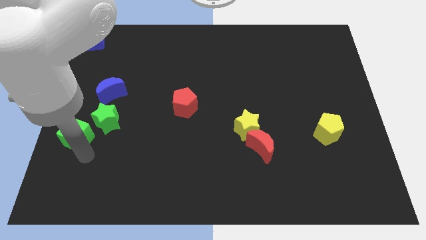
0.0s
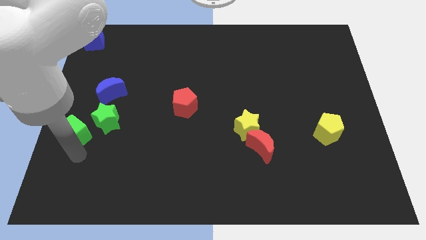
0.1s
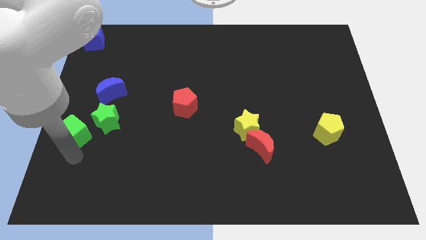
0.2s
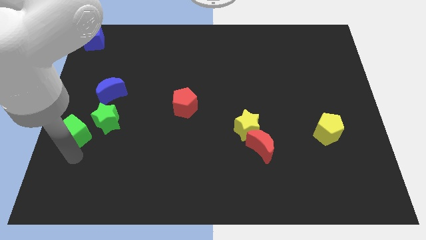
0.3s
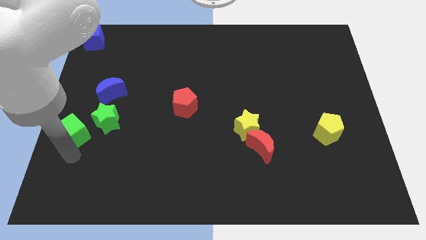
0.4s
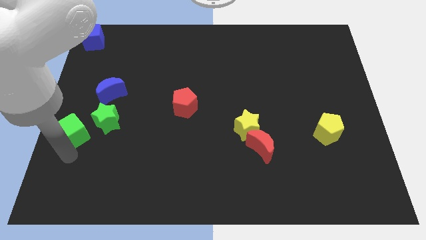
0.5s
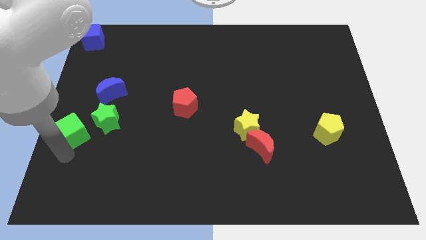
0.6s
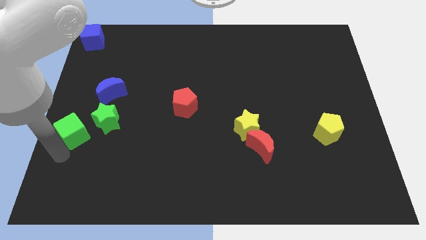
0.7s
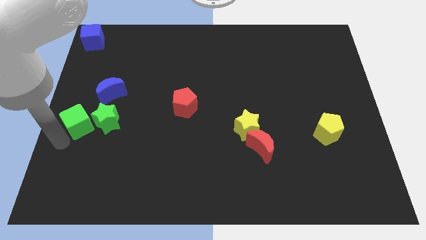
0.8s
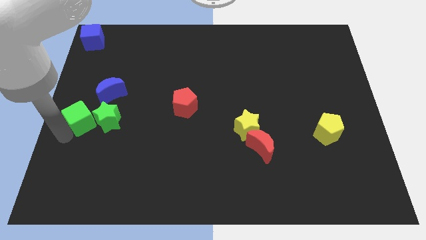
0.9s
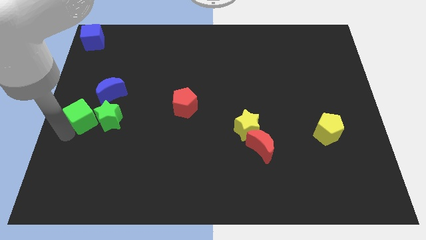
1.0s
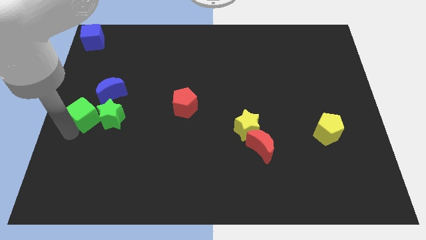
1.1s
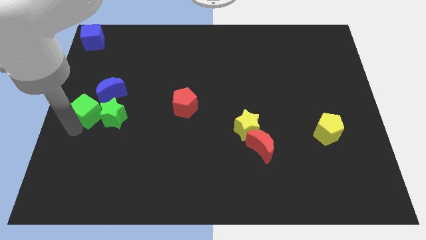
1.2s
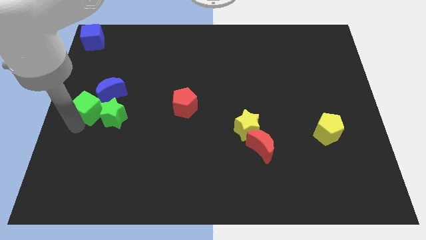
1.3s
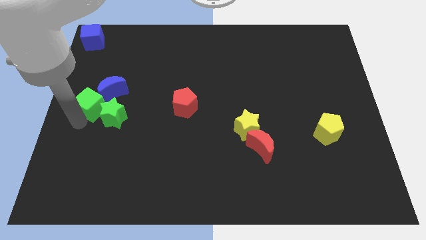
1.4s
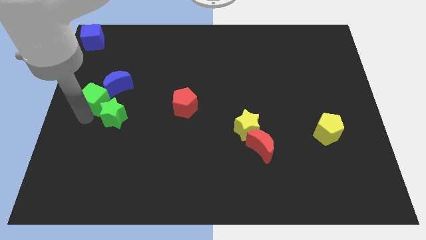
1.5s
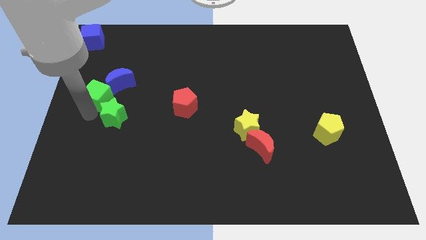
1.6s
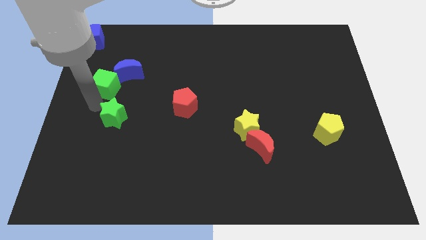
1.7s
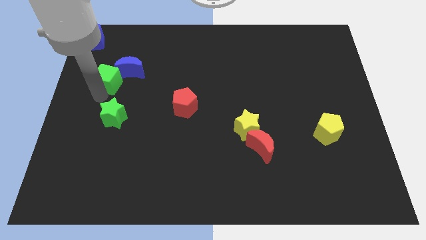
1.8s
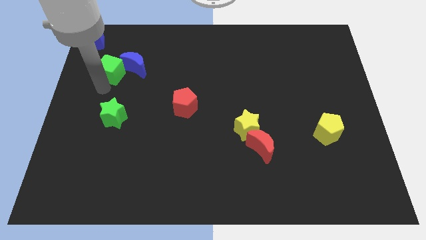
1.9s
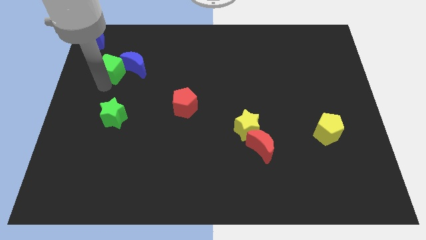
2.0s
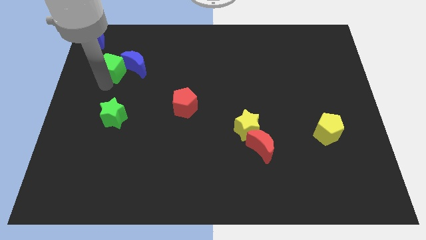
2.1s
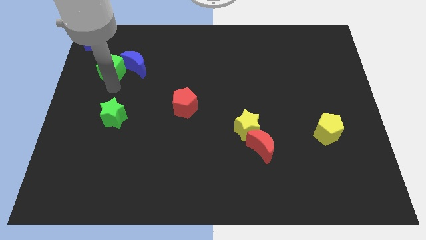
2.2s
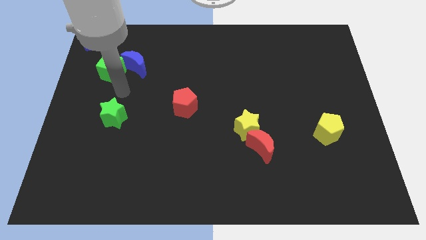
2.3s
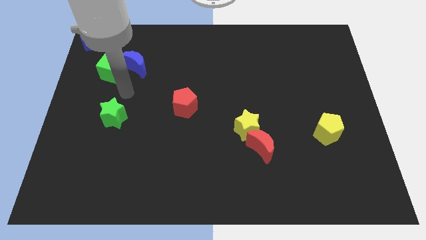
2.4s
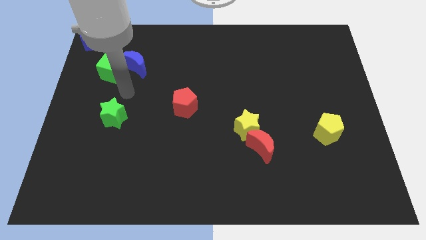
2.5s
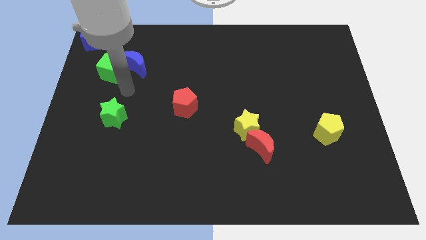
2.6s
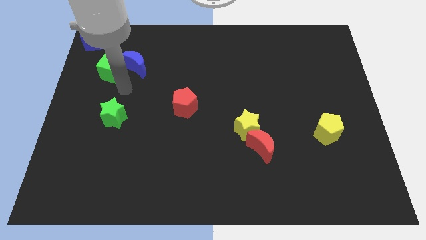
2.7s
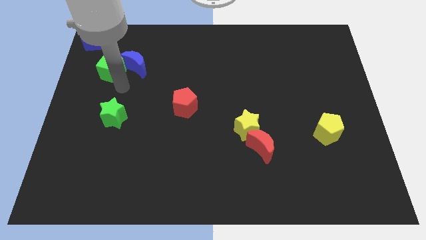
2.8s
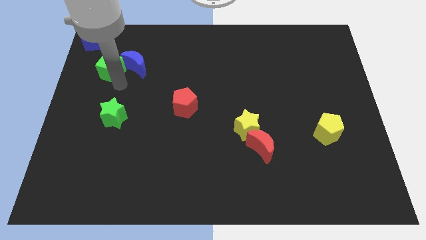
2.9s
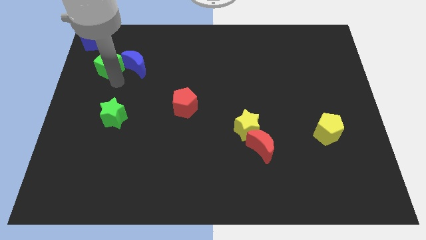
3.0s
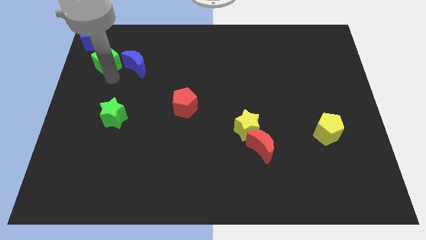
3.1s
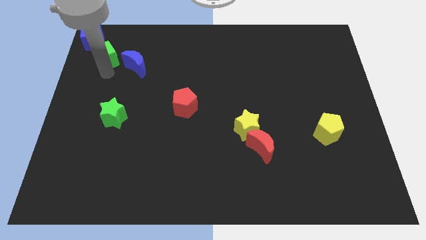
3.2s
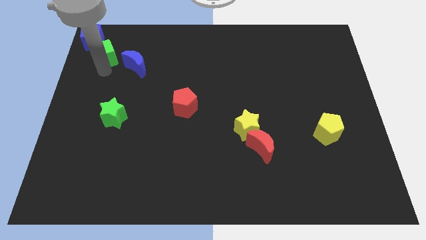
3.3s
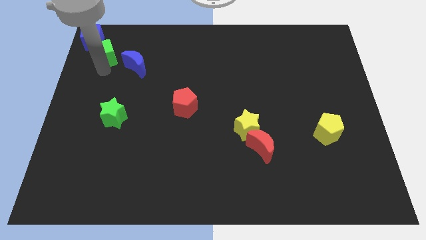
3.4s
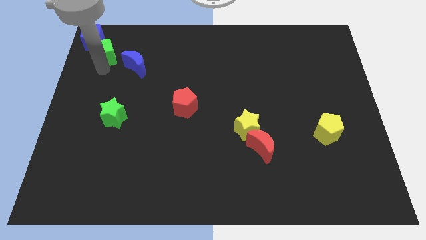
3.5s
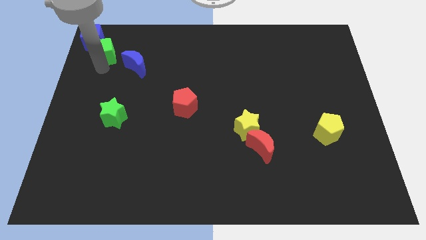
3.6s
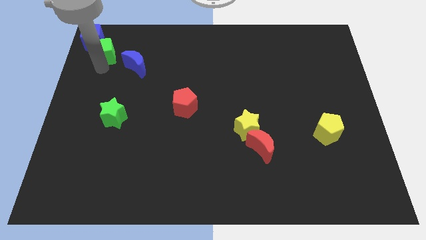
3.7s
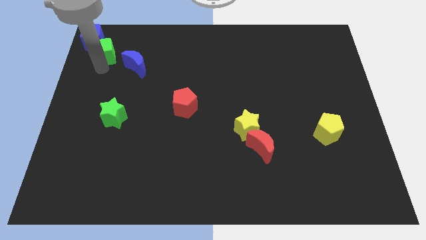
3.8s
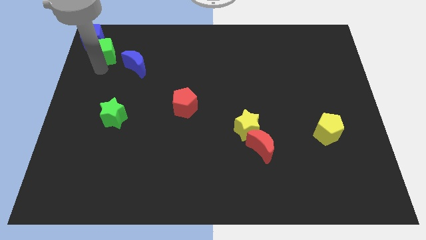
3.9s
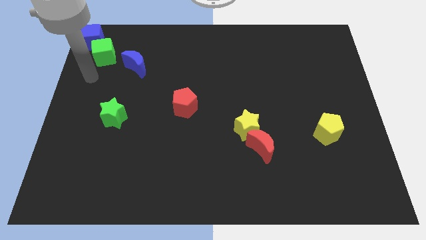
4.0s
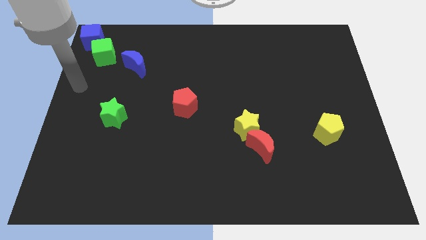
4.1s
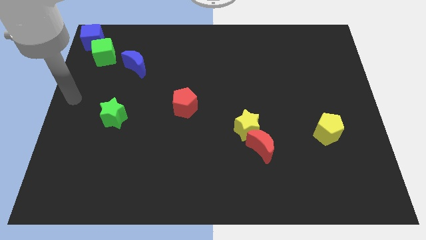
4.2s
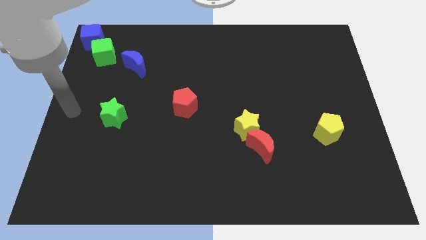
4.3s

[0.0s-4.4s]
move the green cube into the blue cube

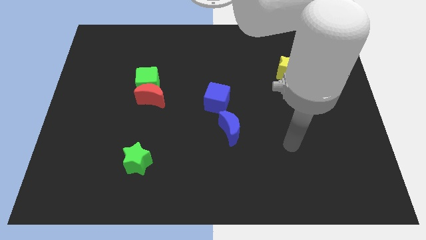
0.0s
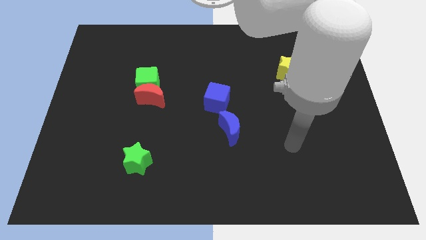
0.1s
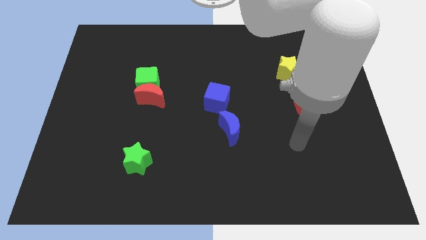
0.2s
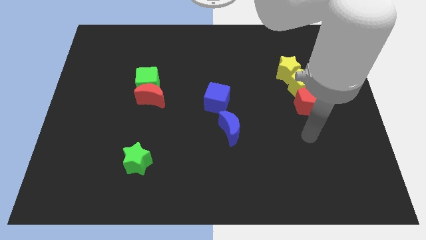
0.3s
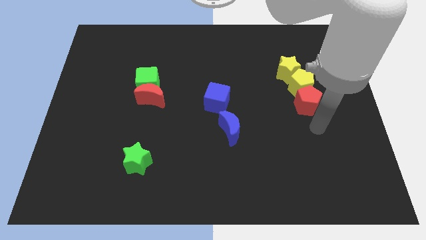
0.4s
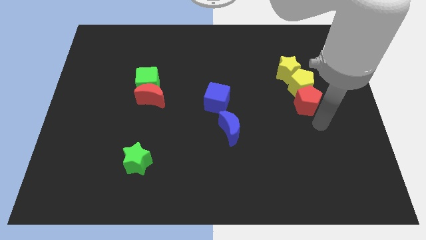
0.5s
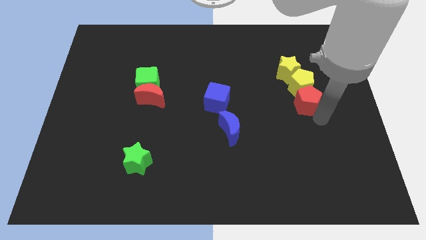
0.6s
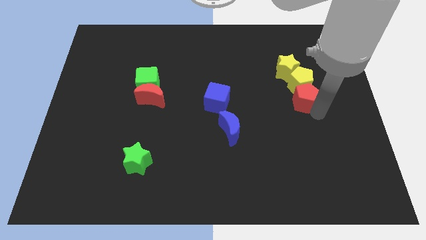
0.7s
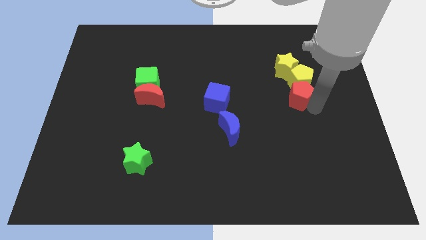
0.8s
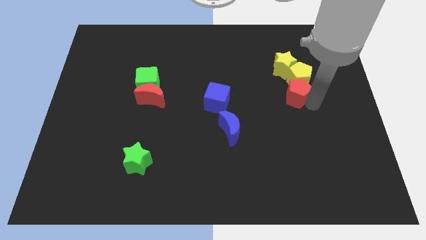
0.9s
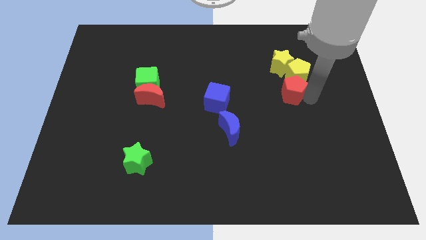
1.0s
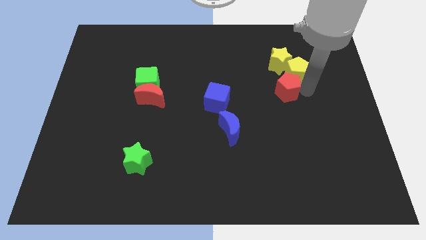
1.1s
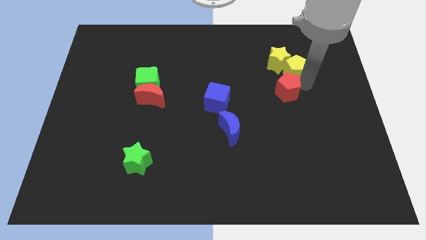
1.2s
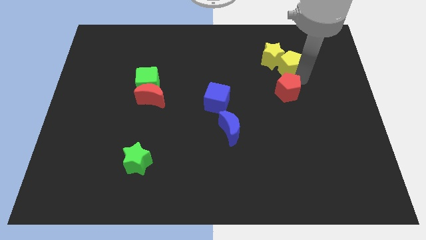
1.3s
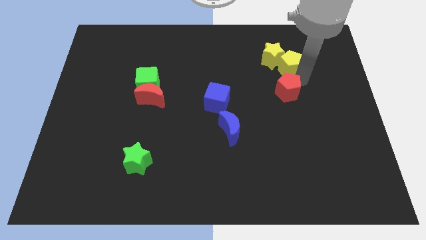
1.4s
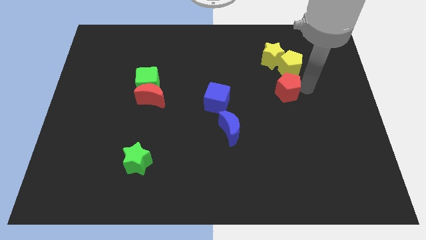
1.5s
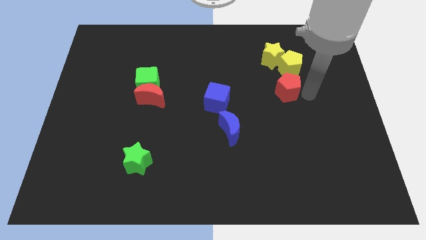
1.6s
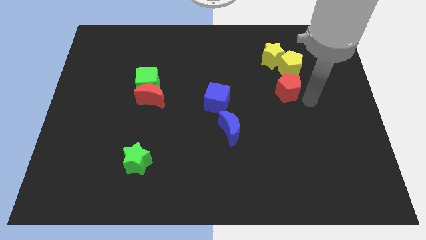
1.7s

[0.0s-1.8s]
push the red pentagon to the bottom of the yellow pentagon

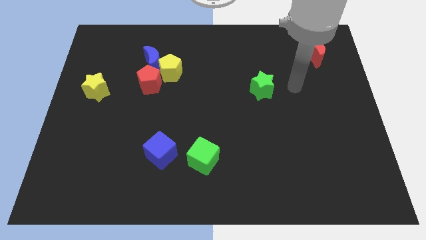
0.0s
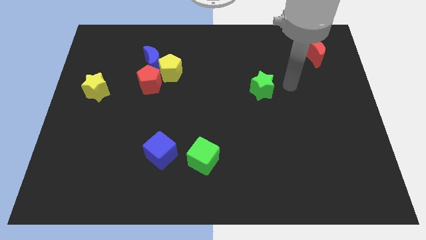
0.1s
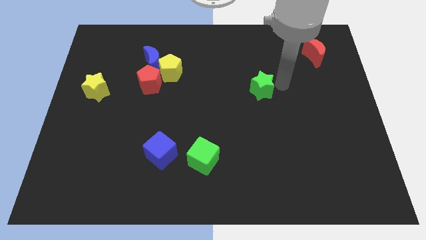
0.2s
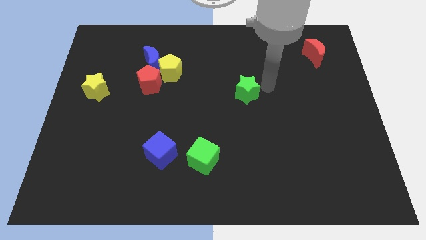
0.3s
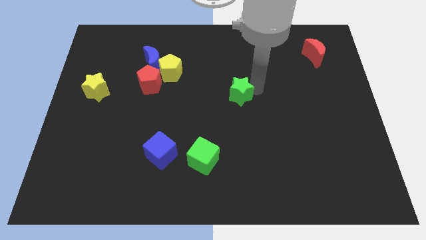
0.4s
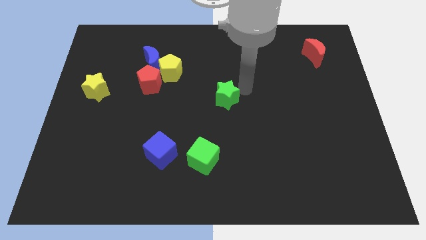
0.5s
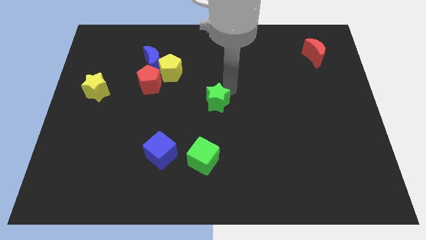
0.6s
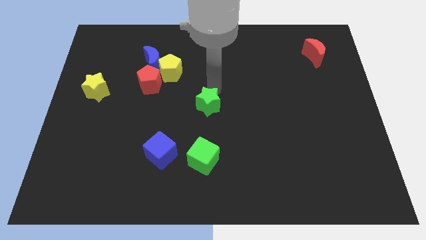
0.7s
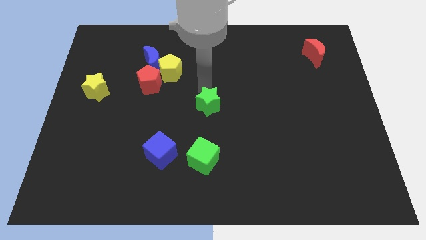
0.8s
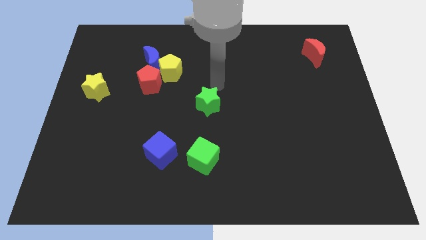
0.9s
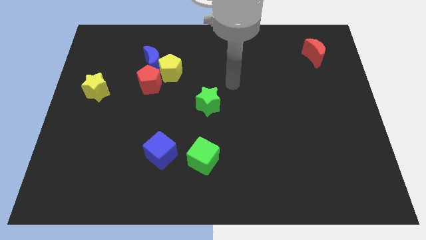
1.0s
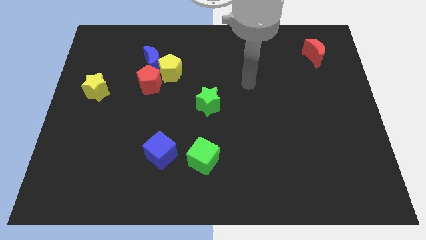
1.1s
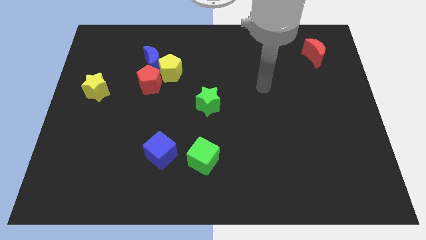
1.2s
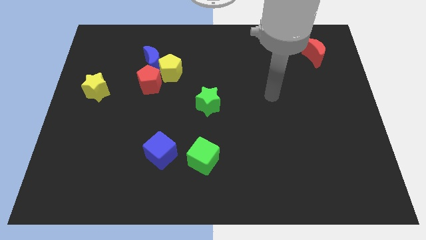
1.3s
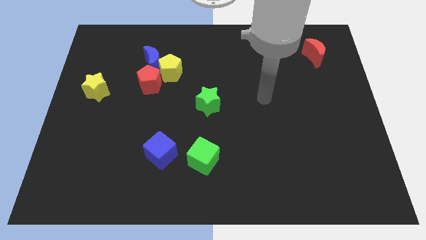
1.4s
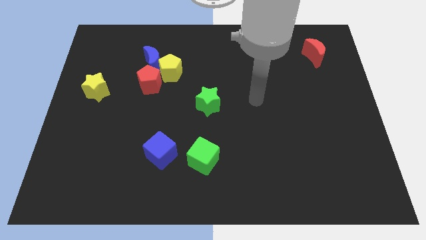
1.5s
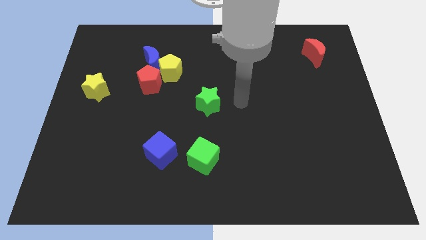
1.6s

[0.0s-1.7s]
push the green star to the top side of the green cube

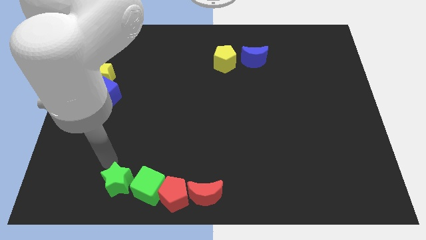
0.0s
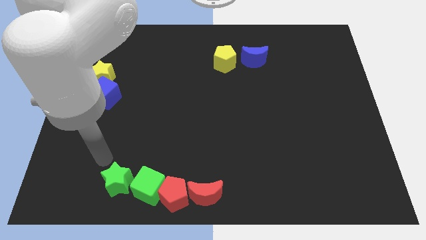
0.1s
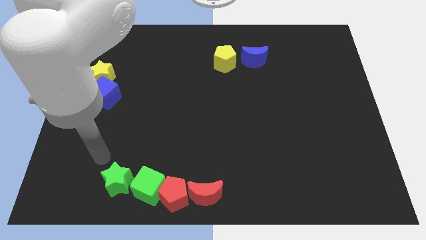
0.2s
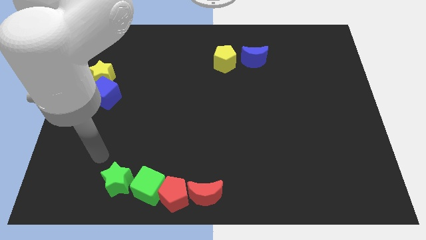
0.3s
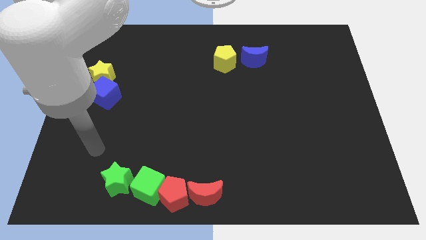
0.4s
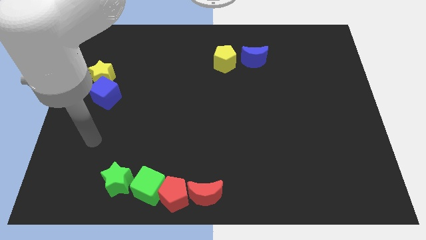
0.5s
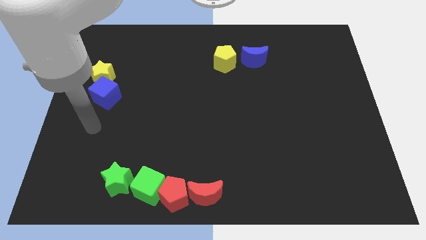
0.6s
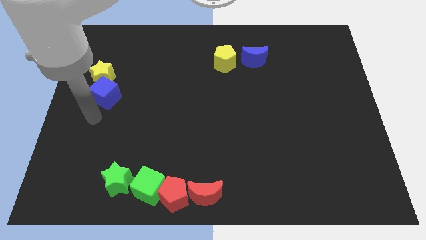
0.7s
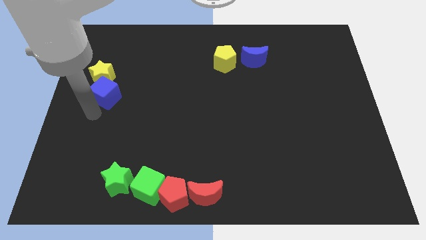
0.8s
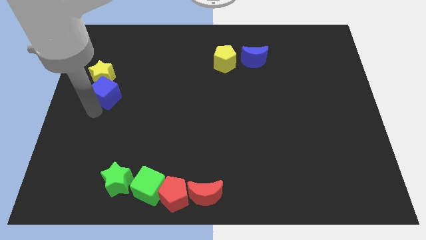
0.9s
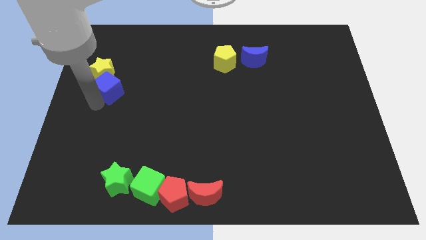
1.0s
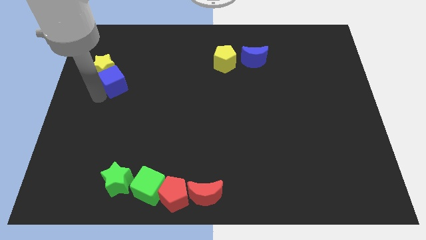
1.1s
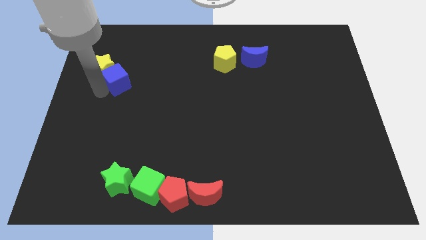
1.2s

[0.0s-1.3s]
move away from the green star

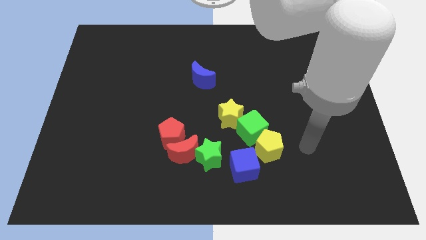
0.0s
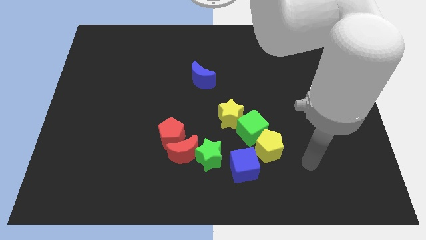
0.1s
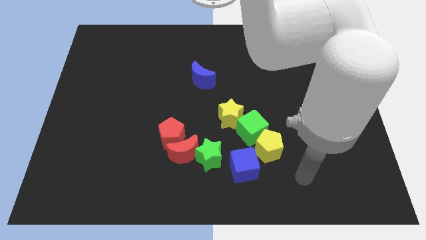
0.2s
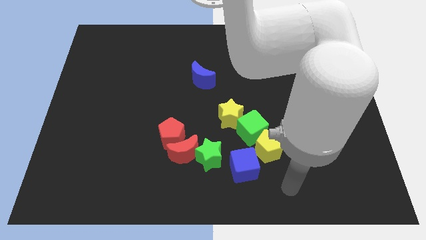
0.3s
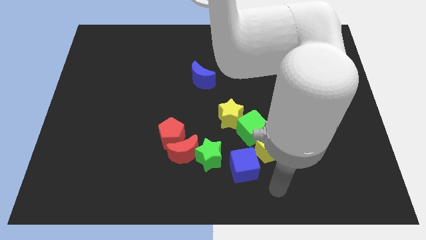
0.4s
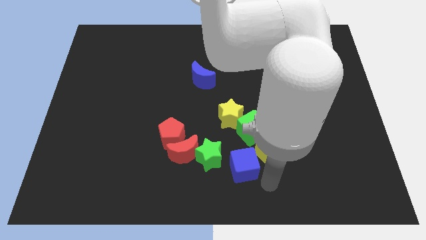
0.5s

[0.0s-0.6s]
move your arm towards the bottom of the yellow pentagon
